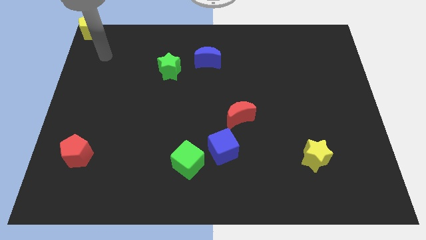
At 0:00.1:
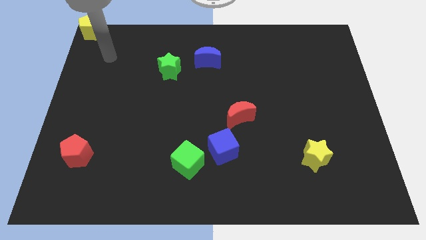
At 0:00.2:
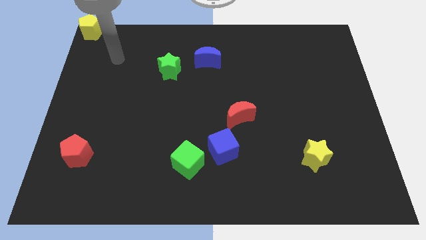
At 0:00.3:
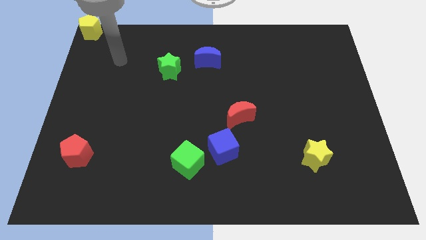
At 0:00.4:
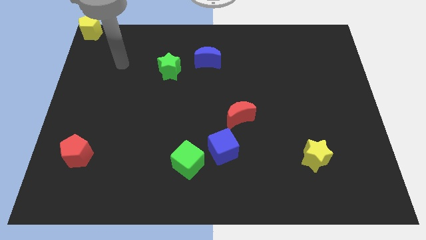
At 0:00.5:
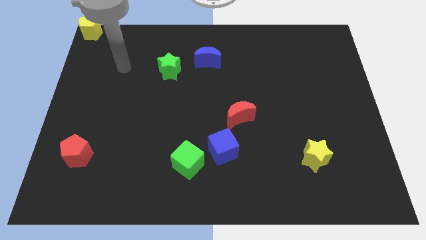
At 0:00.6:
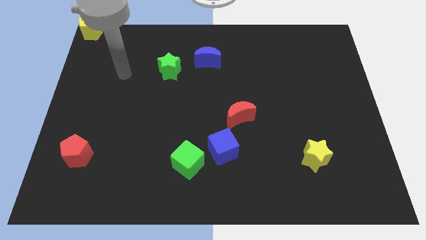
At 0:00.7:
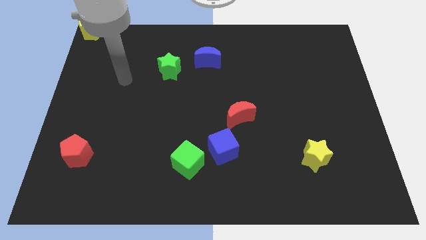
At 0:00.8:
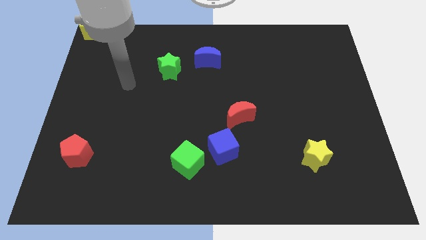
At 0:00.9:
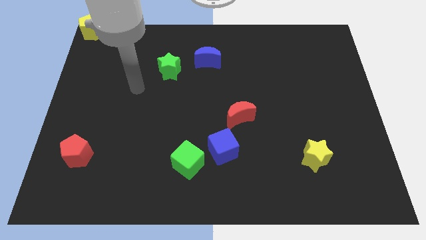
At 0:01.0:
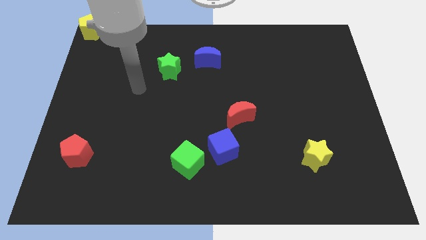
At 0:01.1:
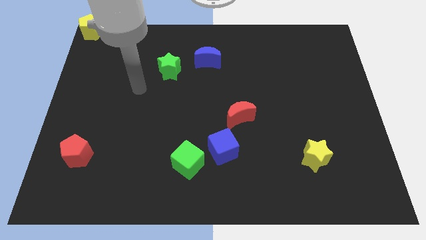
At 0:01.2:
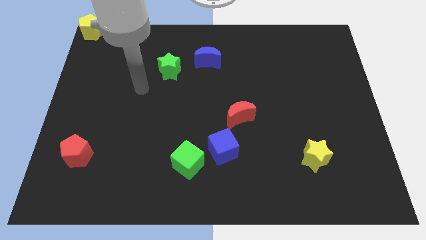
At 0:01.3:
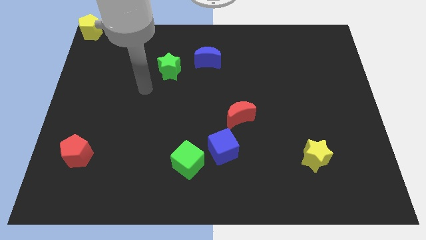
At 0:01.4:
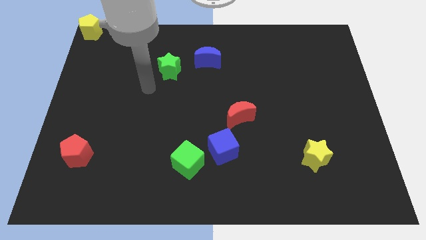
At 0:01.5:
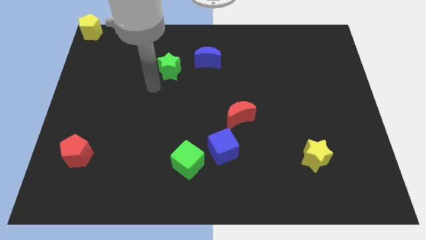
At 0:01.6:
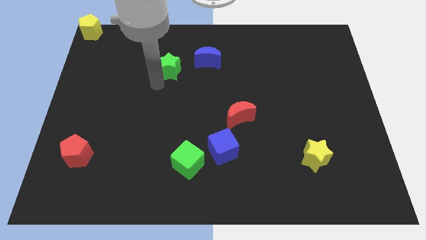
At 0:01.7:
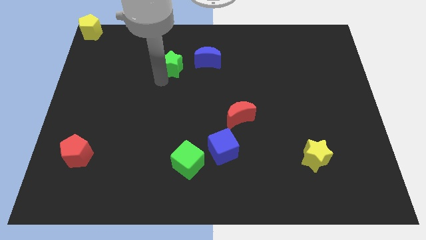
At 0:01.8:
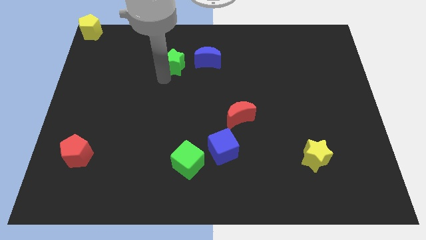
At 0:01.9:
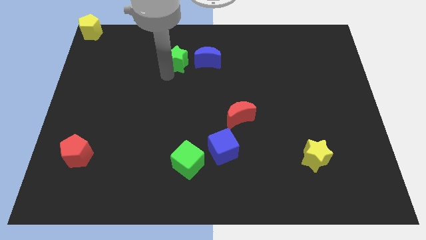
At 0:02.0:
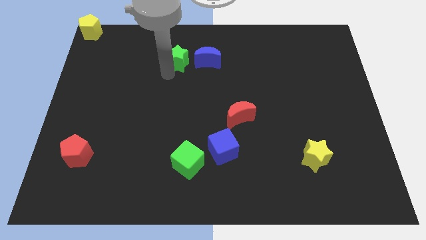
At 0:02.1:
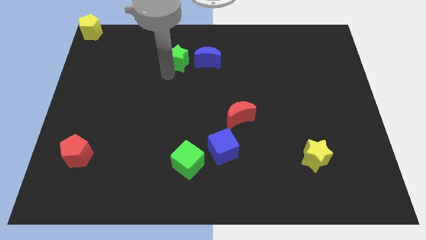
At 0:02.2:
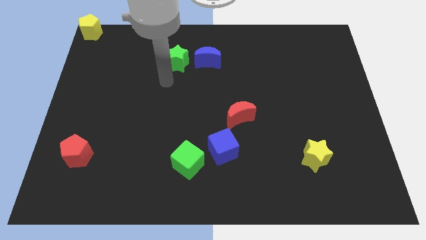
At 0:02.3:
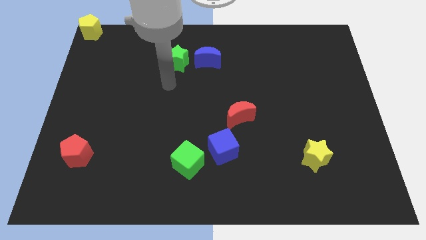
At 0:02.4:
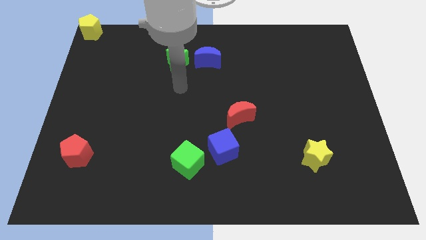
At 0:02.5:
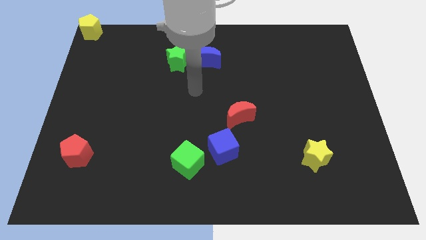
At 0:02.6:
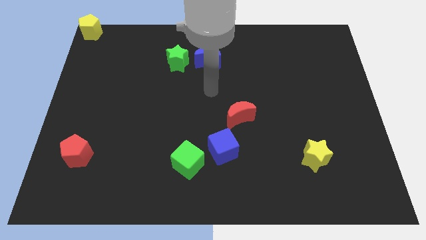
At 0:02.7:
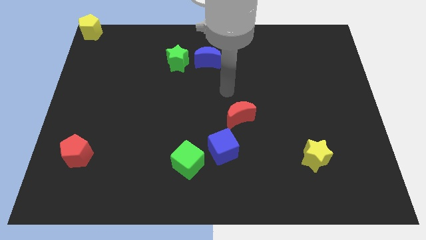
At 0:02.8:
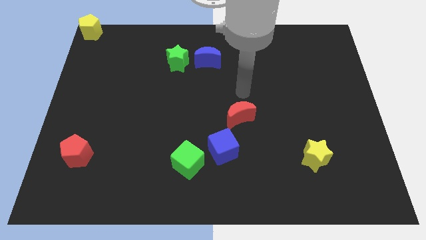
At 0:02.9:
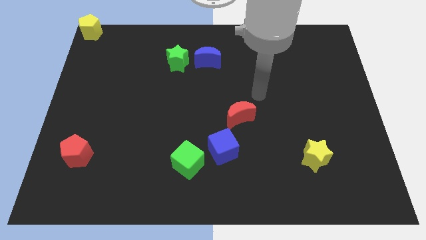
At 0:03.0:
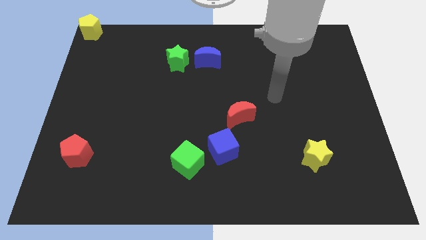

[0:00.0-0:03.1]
move the green star slightly towards the top of the board

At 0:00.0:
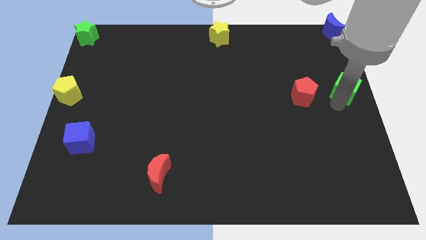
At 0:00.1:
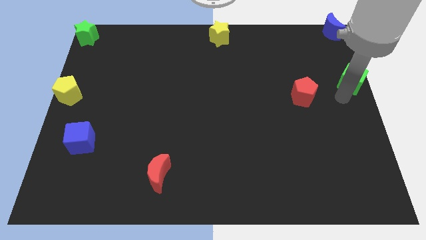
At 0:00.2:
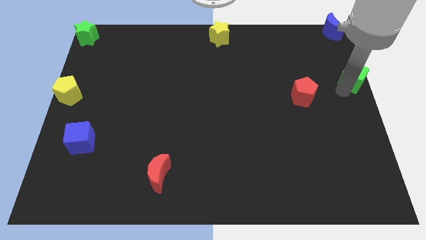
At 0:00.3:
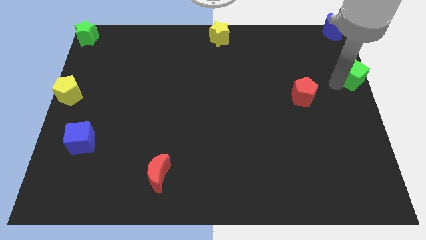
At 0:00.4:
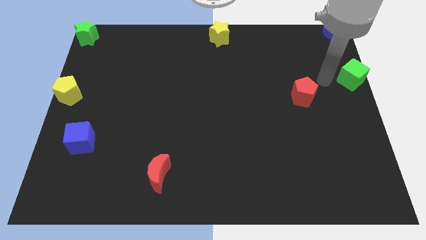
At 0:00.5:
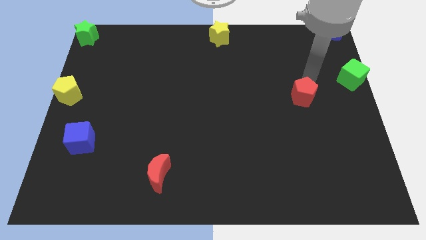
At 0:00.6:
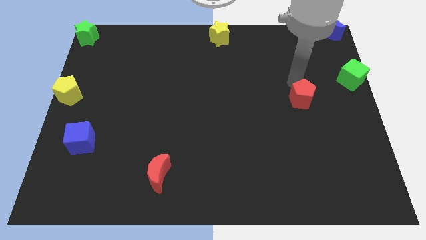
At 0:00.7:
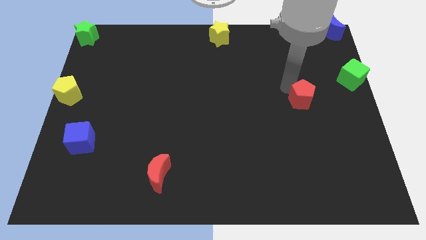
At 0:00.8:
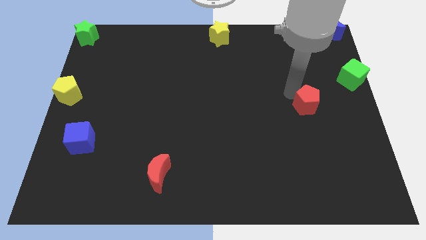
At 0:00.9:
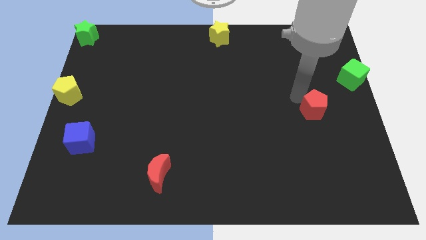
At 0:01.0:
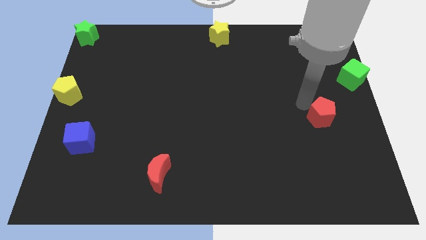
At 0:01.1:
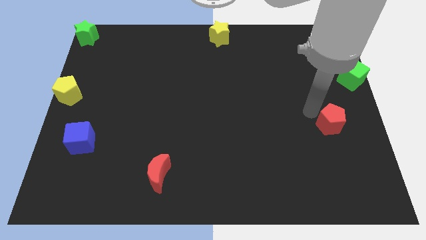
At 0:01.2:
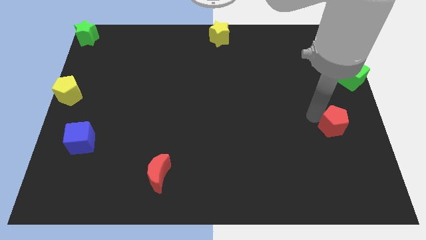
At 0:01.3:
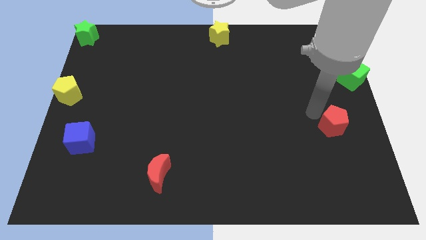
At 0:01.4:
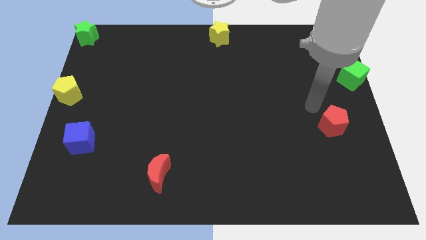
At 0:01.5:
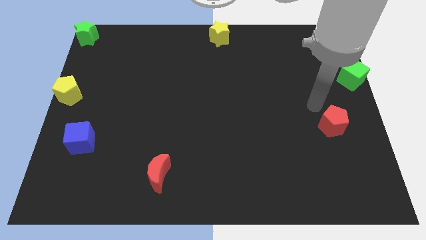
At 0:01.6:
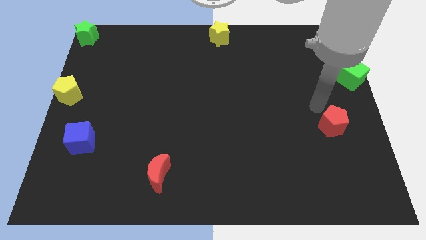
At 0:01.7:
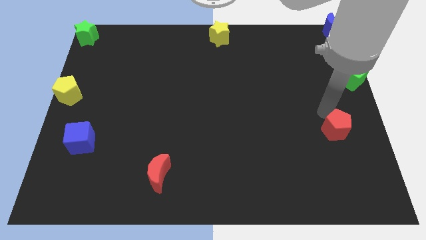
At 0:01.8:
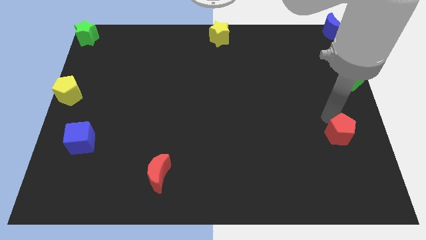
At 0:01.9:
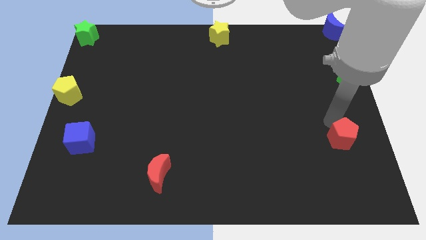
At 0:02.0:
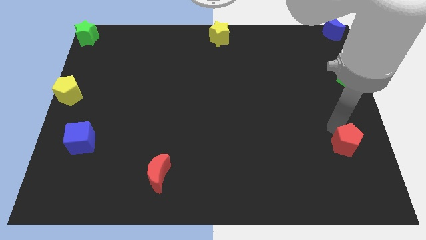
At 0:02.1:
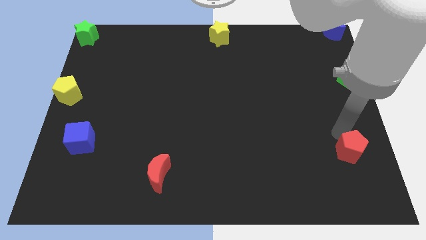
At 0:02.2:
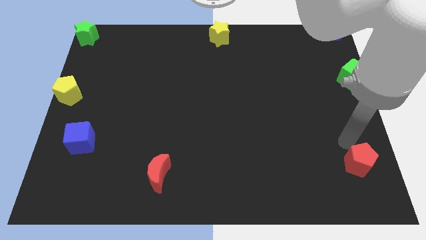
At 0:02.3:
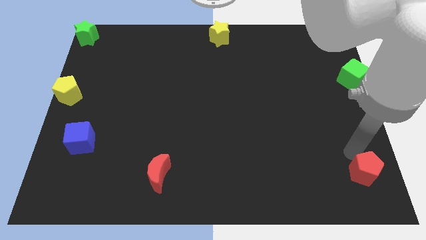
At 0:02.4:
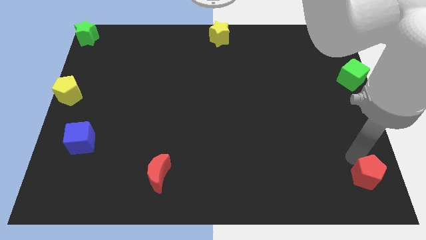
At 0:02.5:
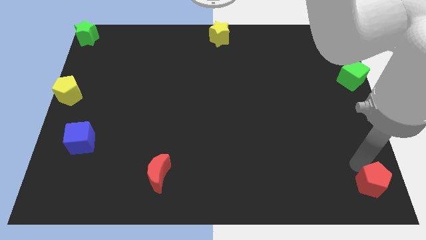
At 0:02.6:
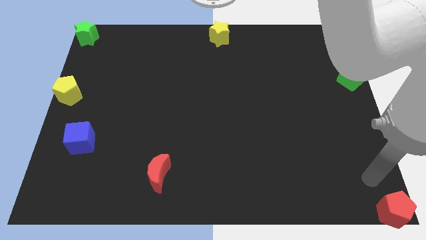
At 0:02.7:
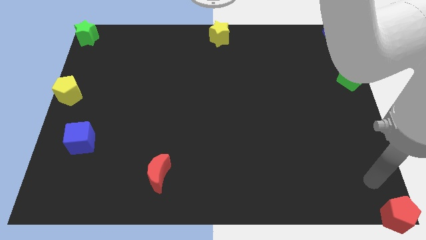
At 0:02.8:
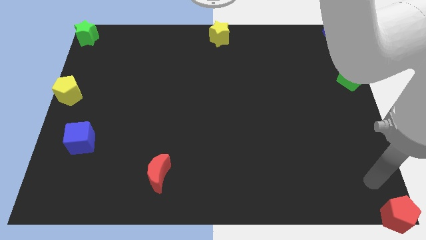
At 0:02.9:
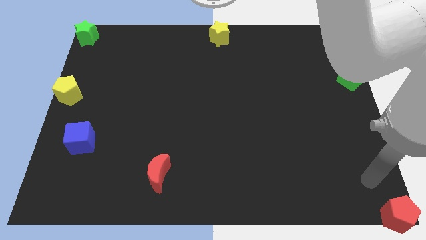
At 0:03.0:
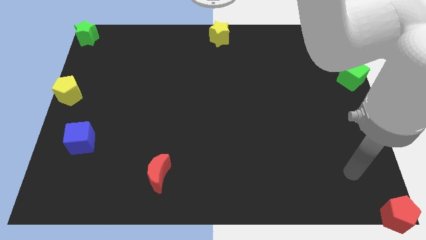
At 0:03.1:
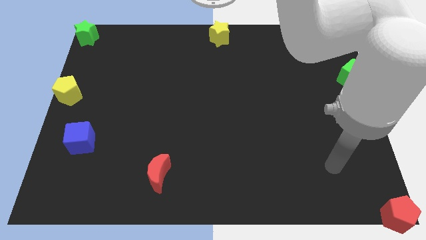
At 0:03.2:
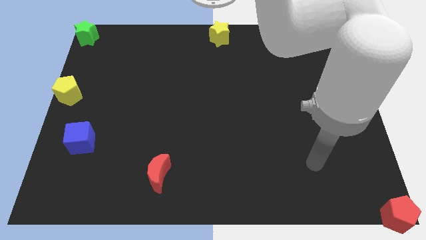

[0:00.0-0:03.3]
push the red pentagon to the bottom right corner

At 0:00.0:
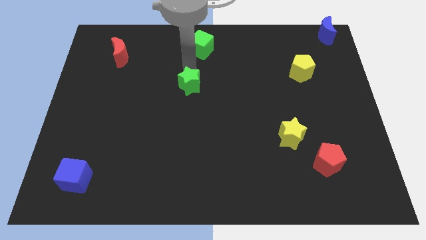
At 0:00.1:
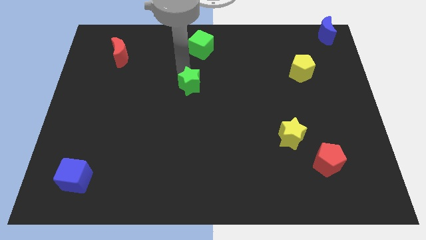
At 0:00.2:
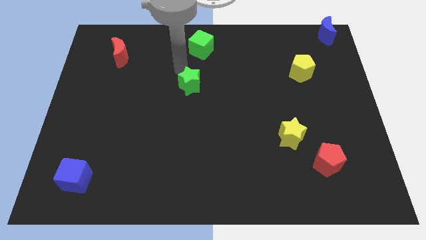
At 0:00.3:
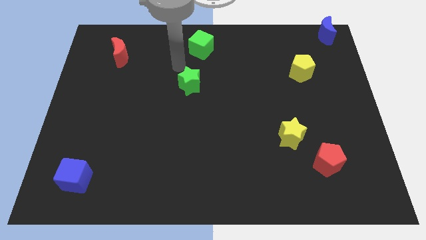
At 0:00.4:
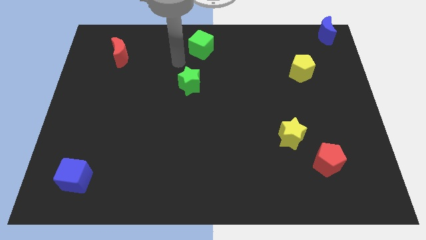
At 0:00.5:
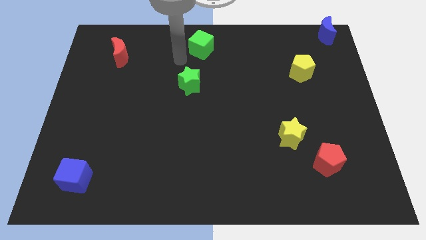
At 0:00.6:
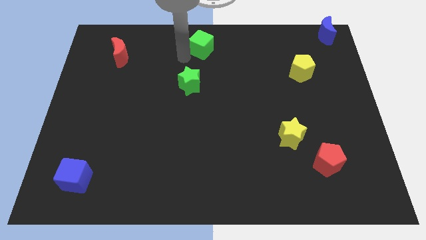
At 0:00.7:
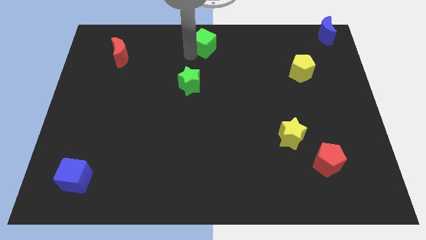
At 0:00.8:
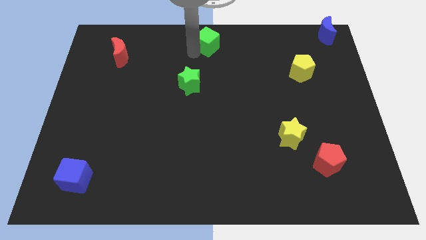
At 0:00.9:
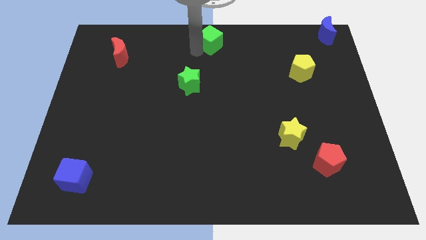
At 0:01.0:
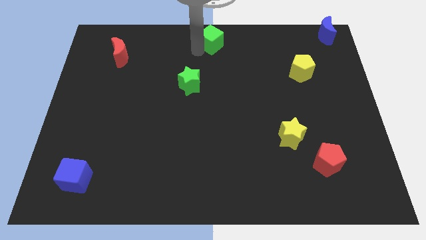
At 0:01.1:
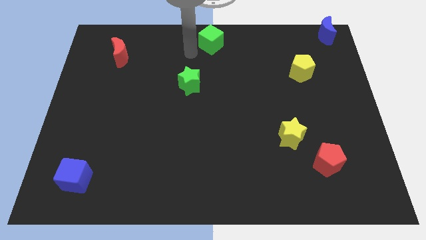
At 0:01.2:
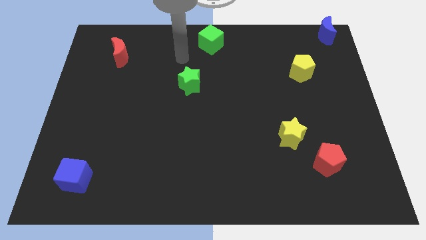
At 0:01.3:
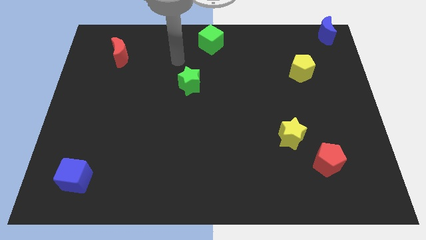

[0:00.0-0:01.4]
move the green cube slightly up

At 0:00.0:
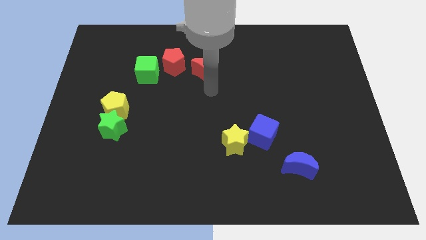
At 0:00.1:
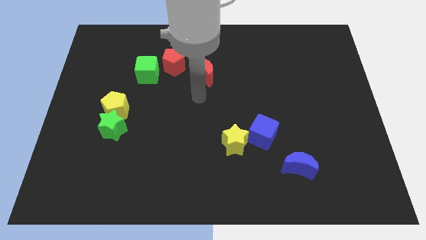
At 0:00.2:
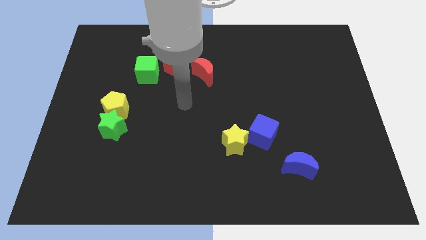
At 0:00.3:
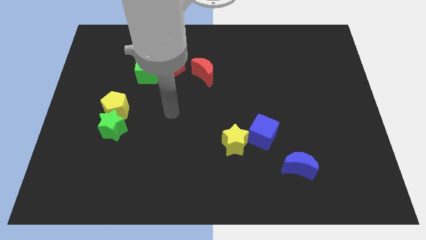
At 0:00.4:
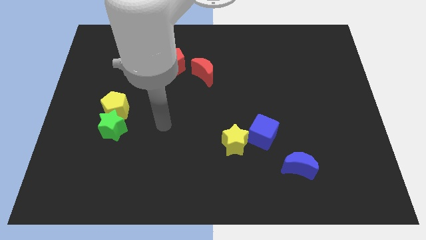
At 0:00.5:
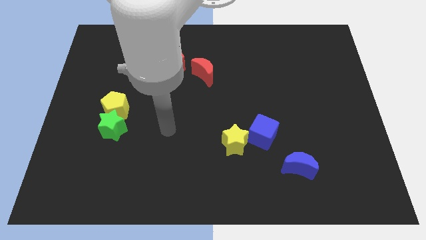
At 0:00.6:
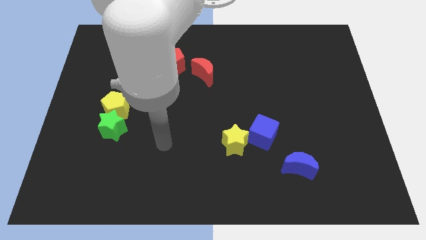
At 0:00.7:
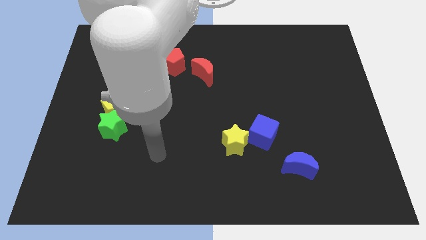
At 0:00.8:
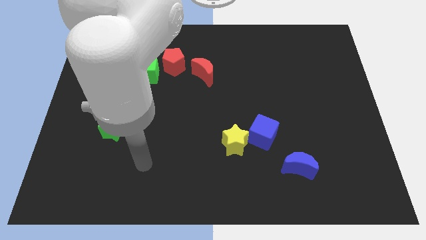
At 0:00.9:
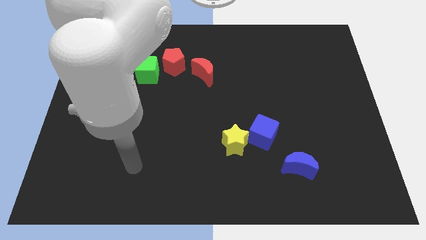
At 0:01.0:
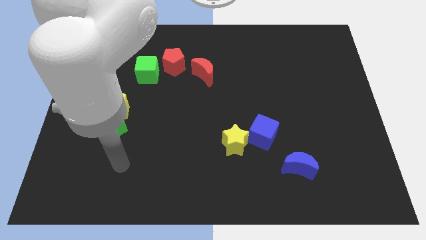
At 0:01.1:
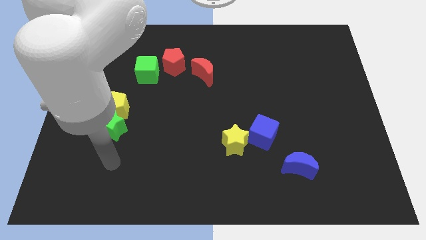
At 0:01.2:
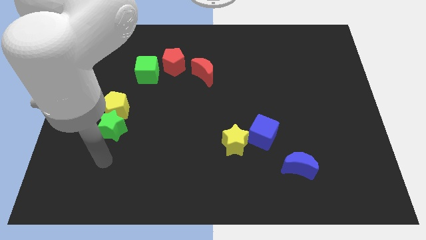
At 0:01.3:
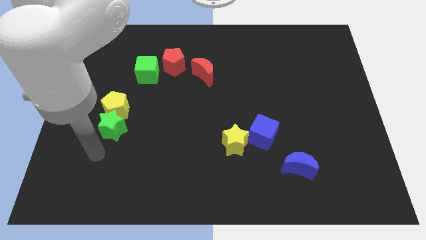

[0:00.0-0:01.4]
put your hand vertically below the green star
